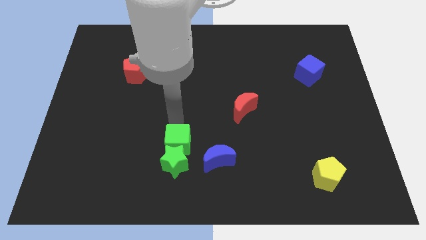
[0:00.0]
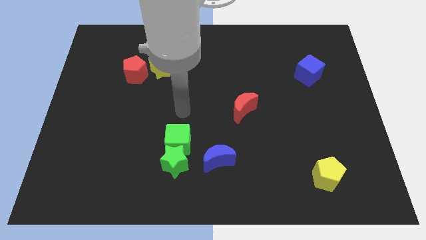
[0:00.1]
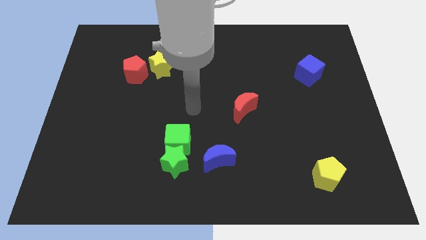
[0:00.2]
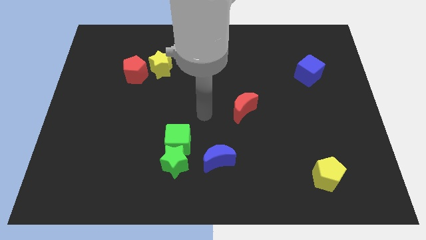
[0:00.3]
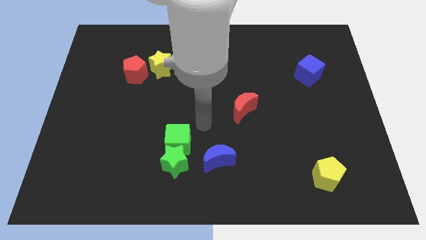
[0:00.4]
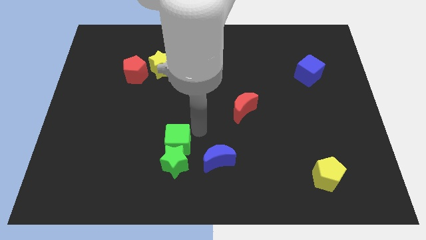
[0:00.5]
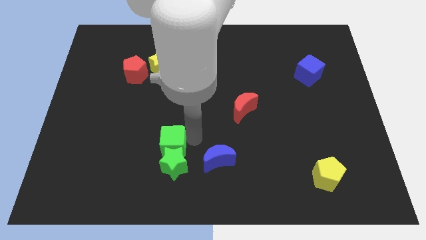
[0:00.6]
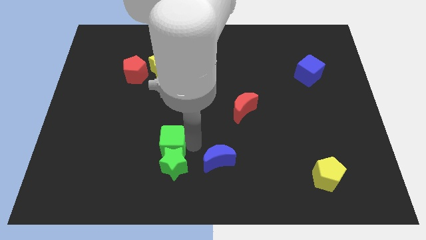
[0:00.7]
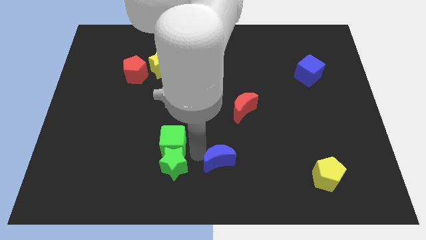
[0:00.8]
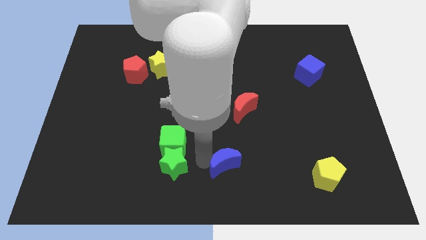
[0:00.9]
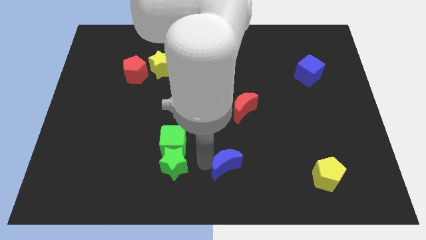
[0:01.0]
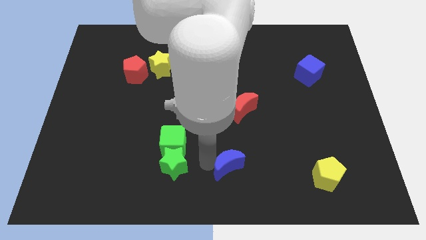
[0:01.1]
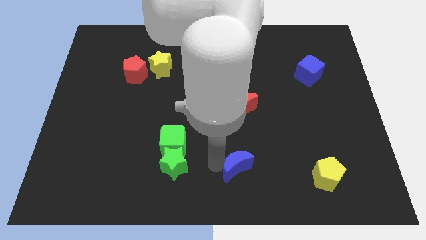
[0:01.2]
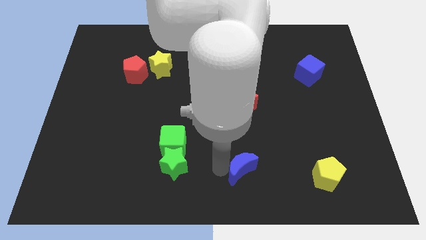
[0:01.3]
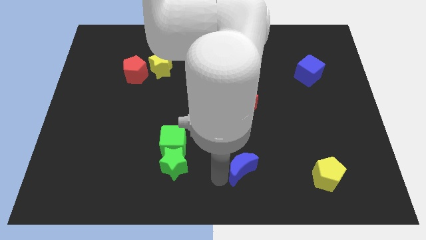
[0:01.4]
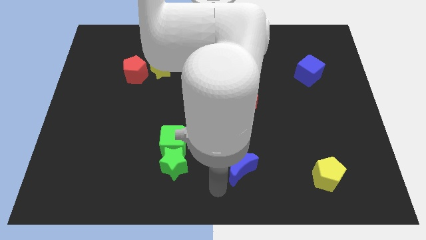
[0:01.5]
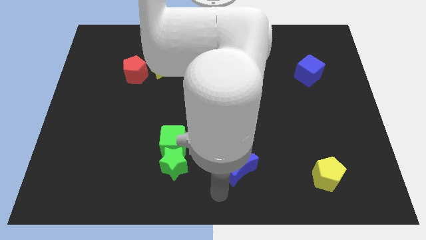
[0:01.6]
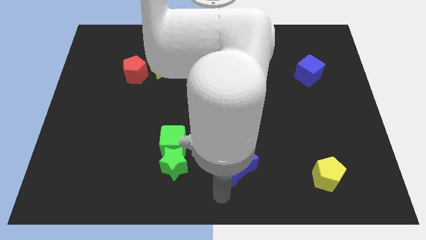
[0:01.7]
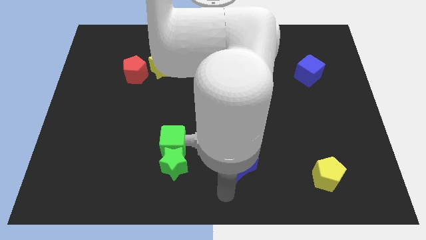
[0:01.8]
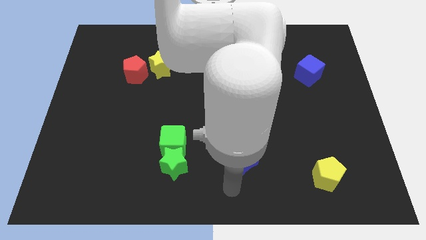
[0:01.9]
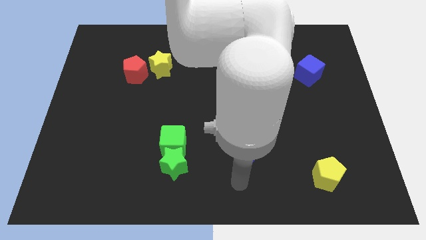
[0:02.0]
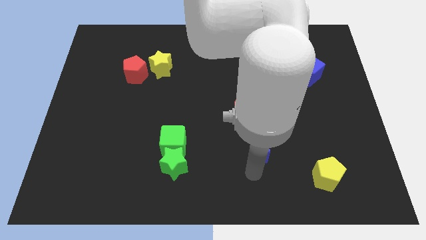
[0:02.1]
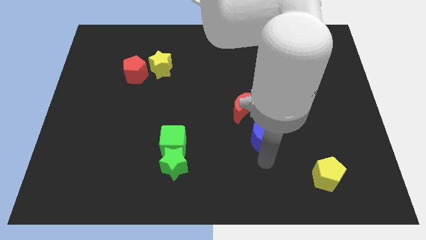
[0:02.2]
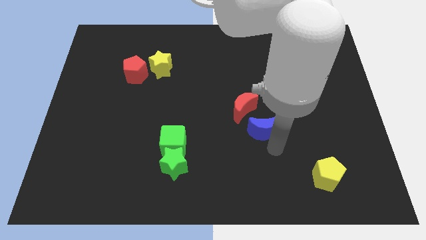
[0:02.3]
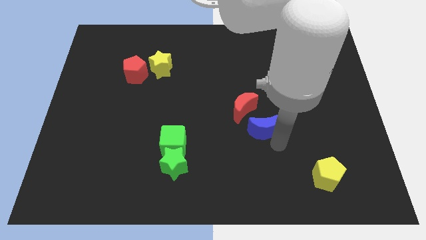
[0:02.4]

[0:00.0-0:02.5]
move the blue crescent below the red crescent

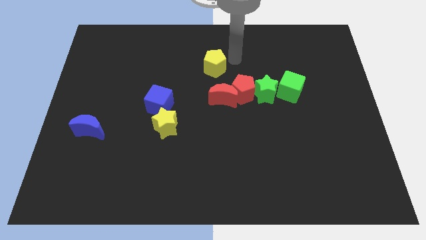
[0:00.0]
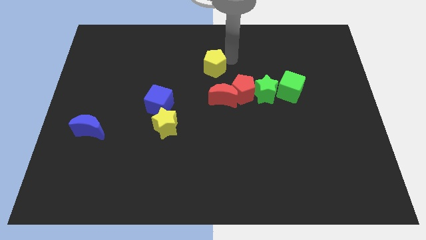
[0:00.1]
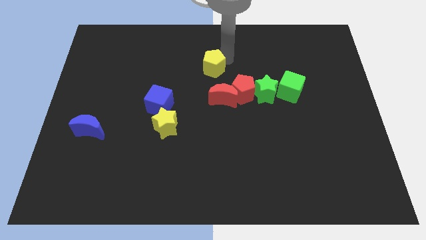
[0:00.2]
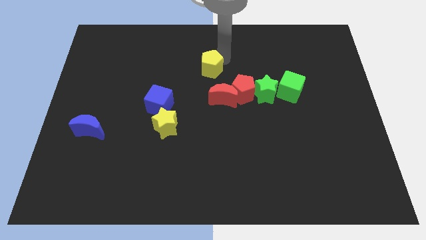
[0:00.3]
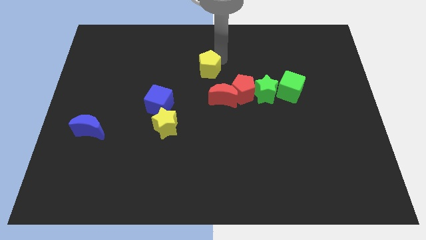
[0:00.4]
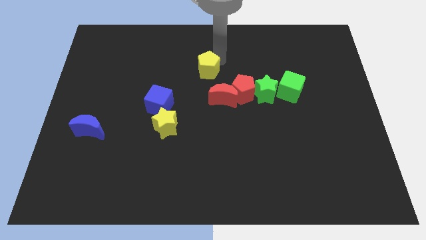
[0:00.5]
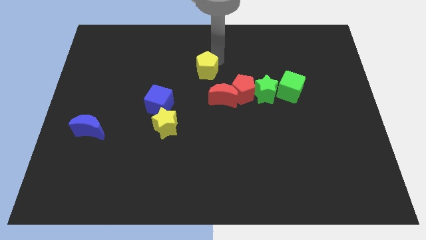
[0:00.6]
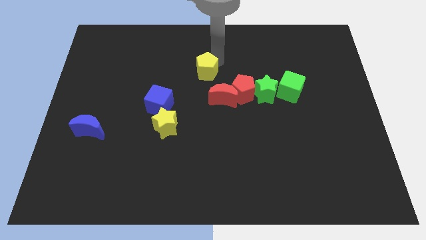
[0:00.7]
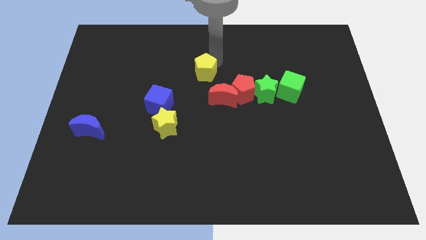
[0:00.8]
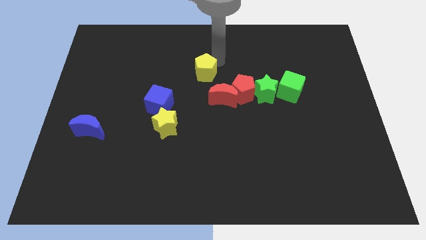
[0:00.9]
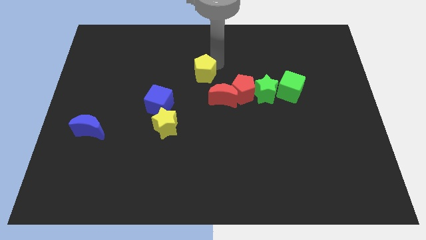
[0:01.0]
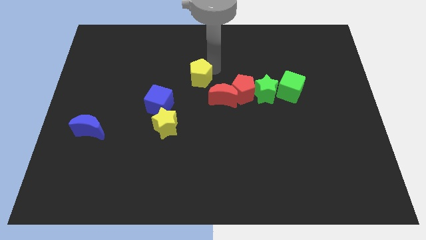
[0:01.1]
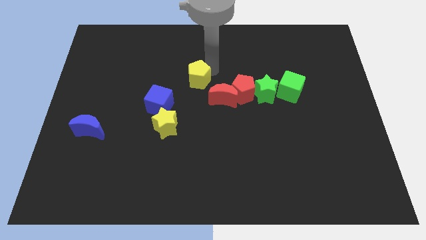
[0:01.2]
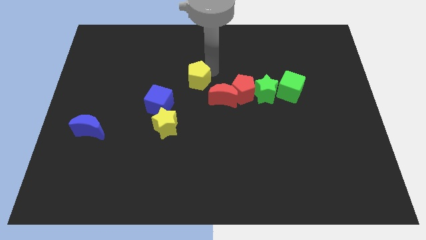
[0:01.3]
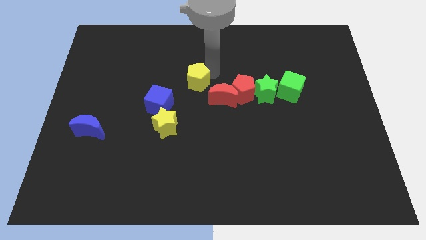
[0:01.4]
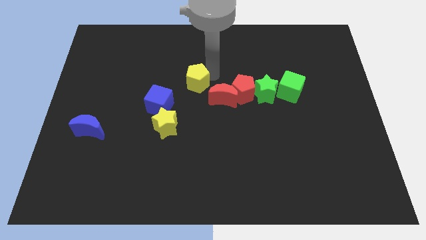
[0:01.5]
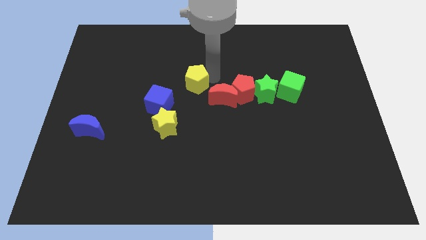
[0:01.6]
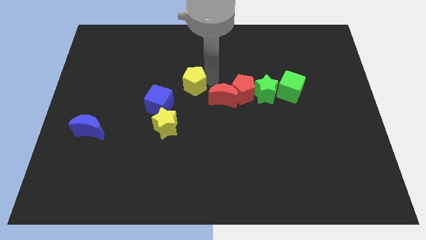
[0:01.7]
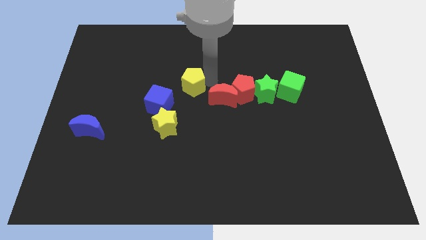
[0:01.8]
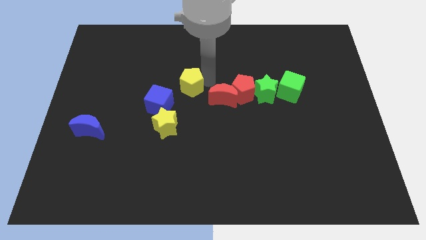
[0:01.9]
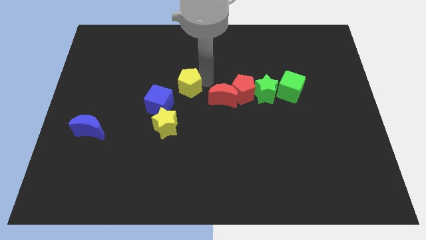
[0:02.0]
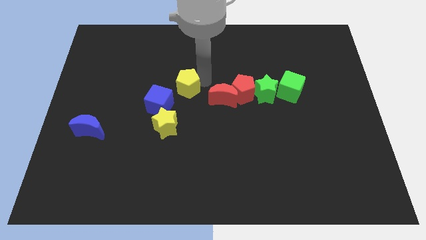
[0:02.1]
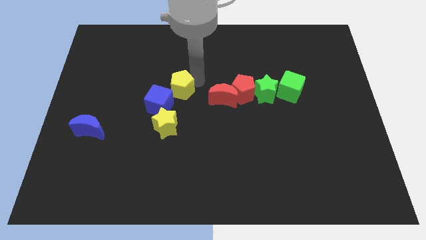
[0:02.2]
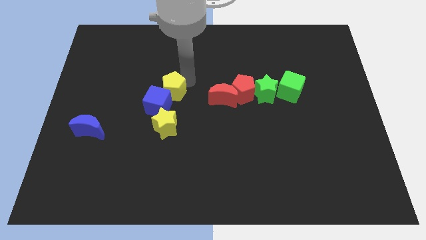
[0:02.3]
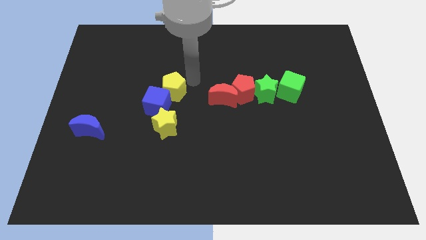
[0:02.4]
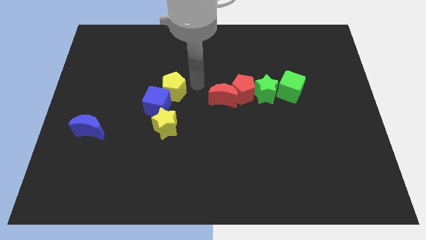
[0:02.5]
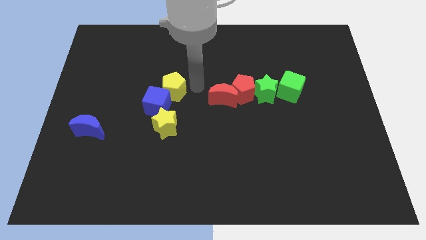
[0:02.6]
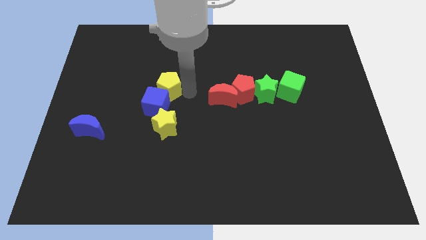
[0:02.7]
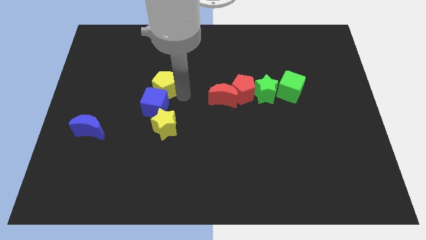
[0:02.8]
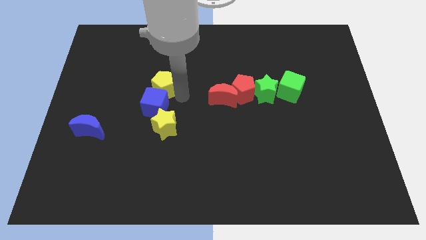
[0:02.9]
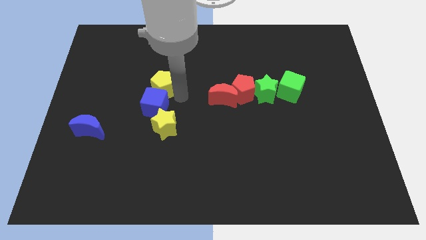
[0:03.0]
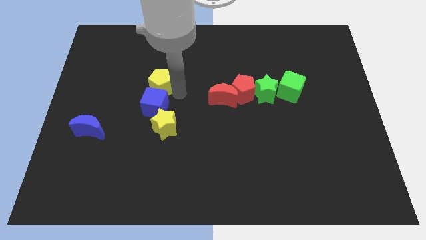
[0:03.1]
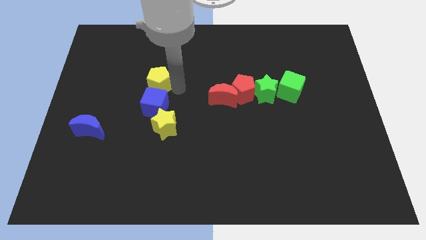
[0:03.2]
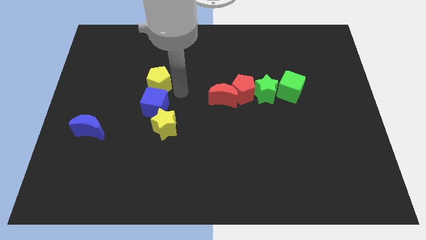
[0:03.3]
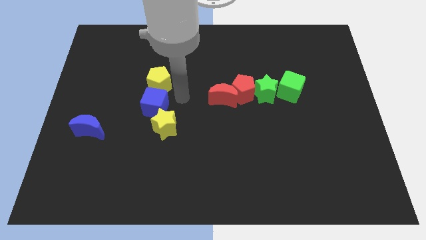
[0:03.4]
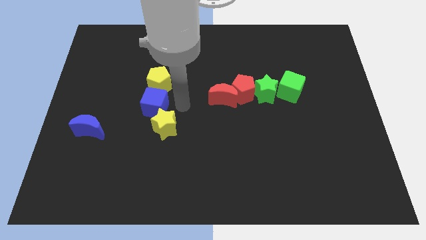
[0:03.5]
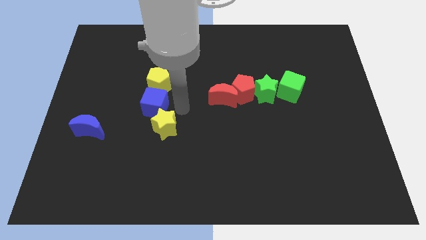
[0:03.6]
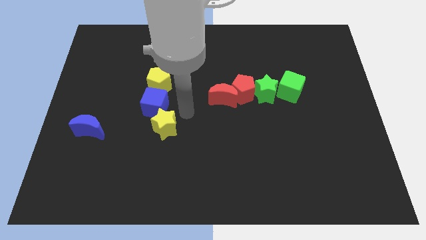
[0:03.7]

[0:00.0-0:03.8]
move the yellow pentagon above the blue cube

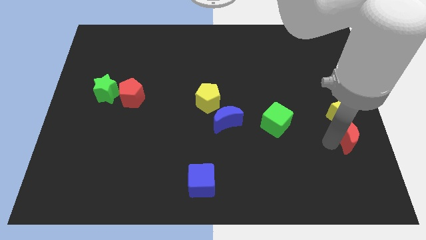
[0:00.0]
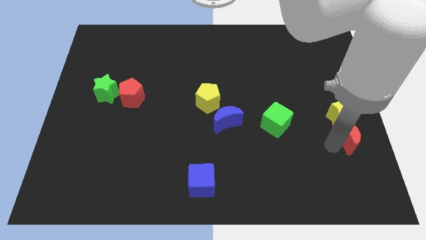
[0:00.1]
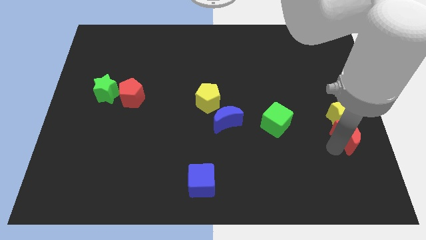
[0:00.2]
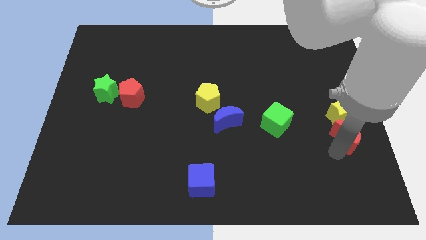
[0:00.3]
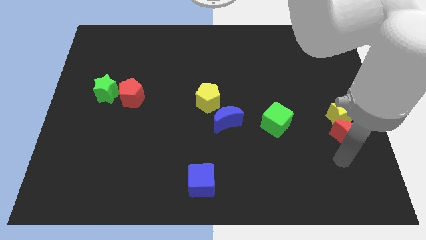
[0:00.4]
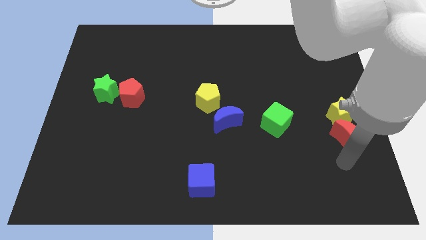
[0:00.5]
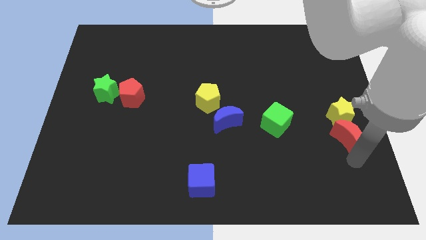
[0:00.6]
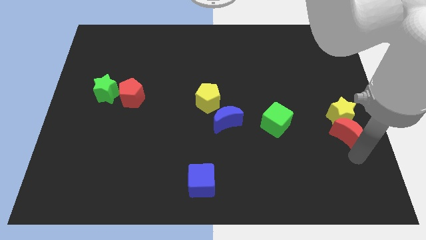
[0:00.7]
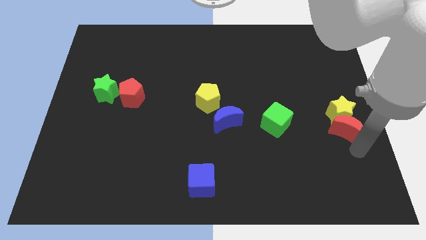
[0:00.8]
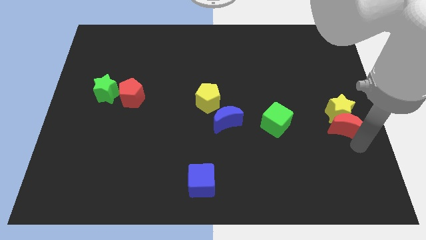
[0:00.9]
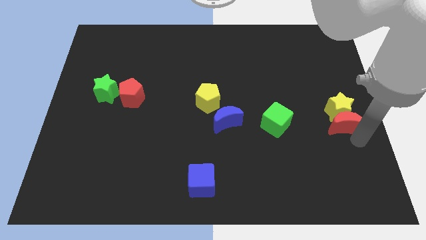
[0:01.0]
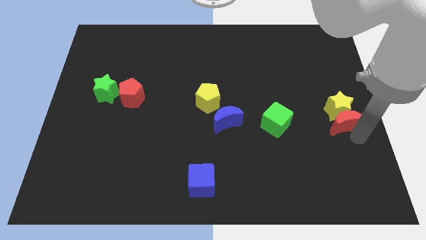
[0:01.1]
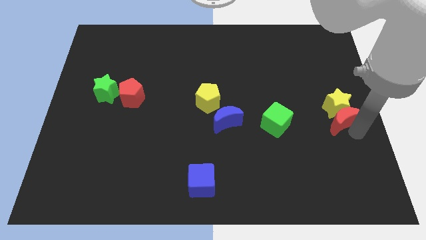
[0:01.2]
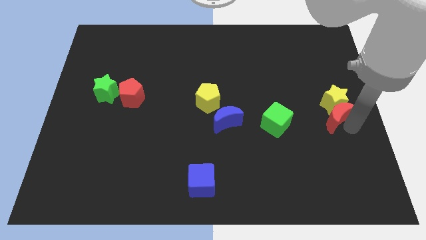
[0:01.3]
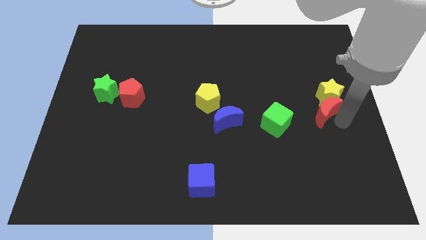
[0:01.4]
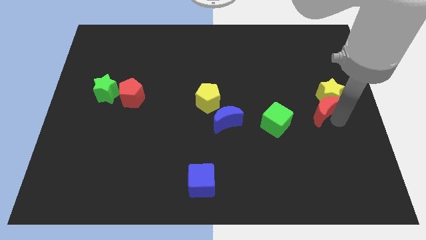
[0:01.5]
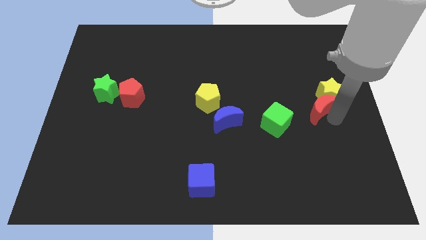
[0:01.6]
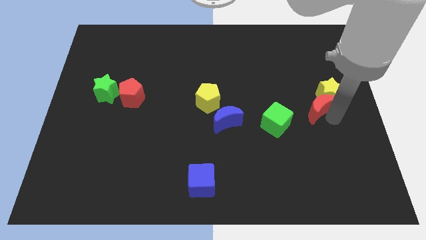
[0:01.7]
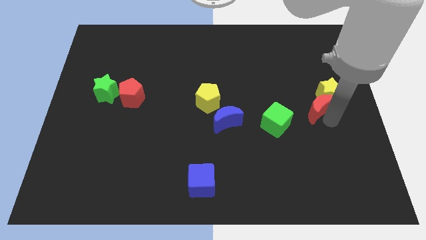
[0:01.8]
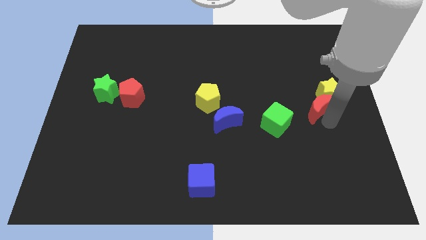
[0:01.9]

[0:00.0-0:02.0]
slightly push the yellow star and red moon towards the top

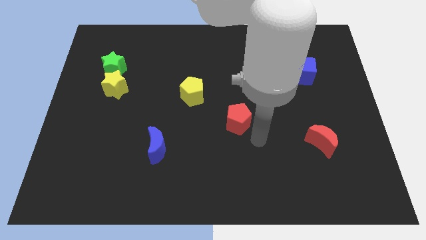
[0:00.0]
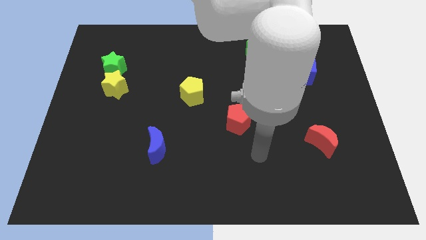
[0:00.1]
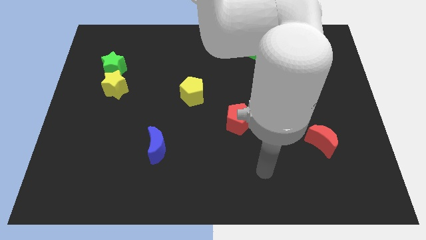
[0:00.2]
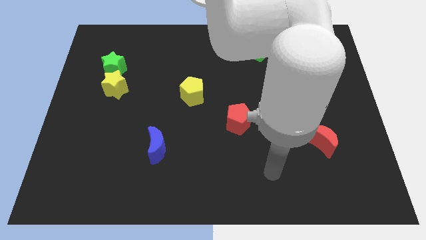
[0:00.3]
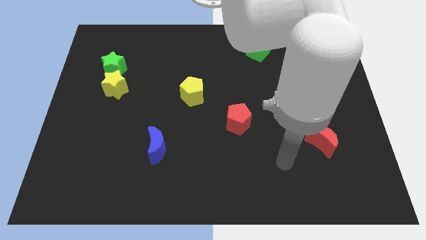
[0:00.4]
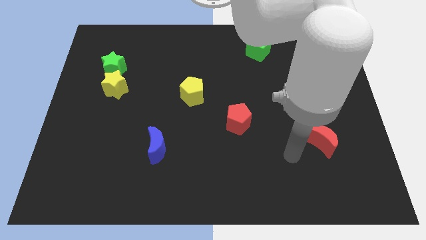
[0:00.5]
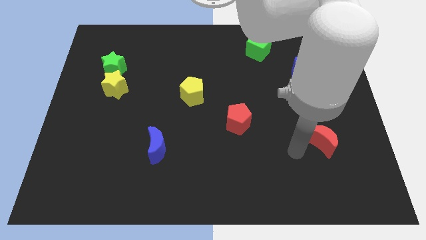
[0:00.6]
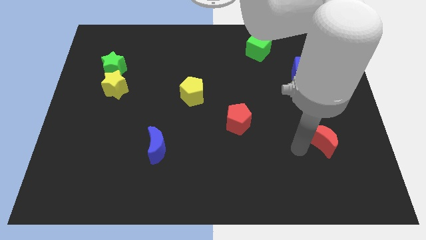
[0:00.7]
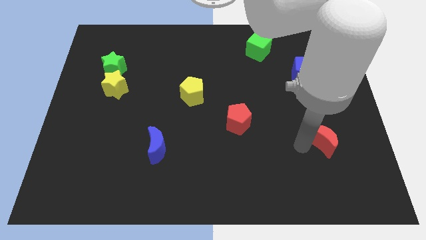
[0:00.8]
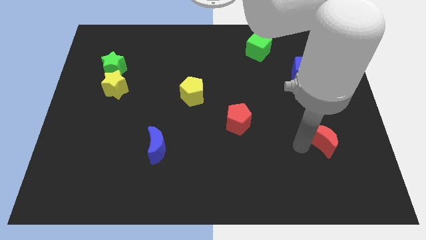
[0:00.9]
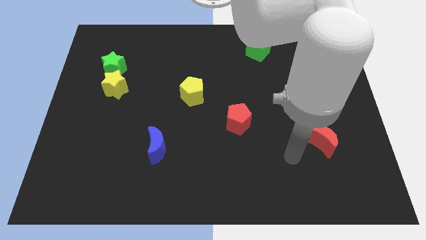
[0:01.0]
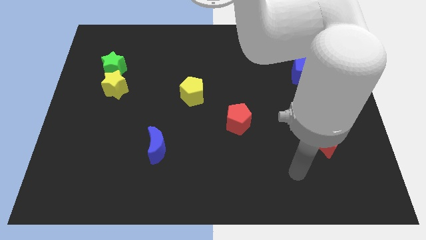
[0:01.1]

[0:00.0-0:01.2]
move your arm close to the red moon
